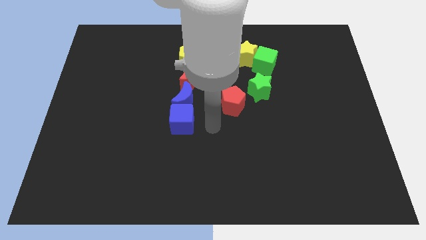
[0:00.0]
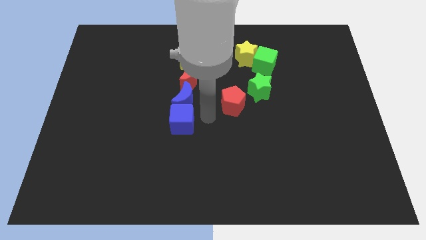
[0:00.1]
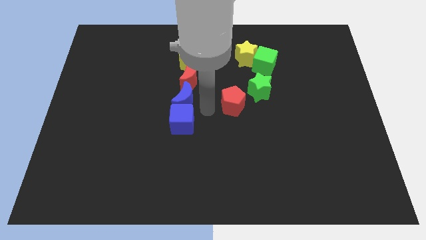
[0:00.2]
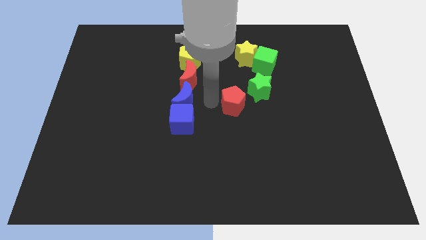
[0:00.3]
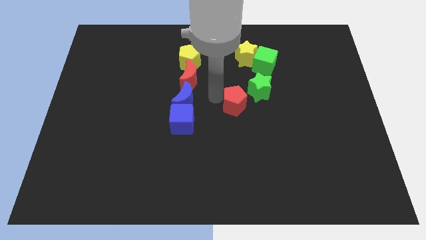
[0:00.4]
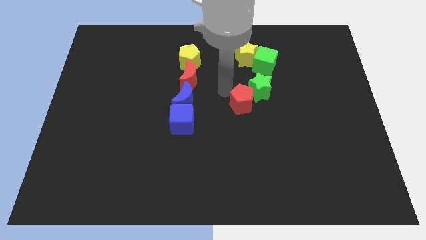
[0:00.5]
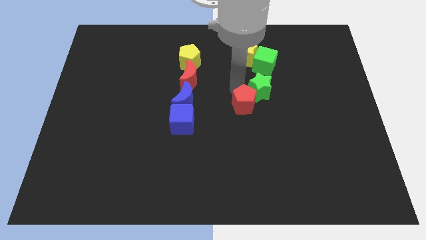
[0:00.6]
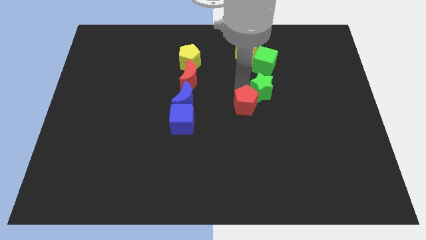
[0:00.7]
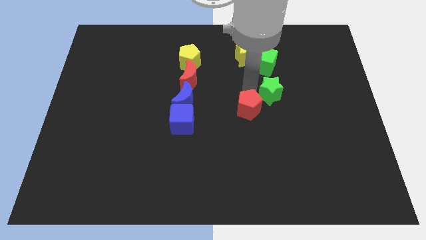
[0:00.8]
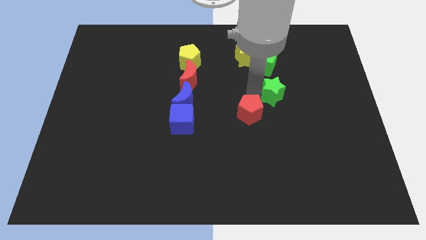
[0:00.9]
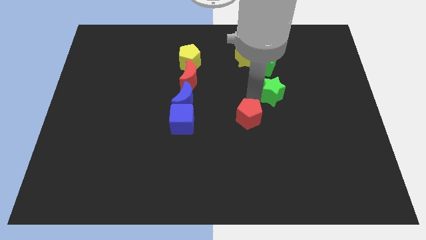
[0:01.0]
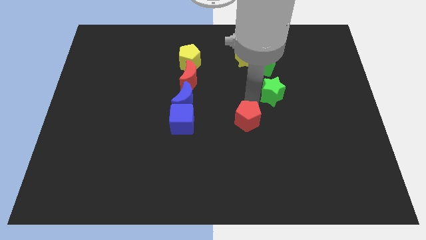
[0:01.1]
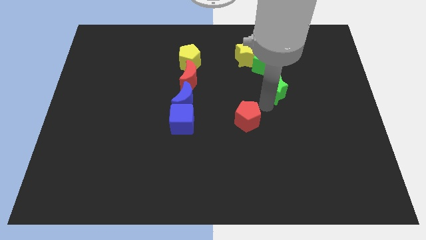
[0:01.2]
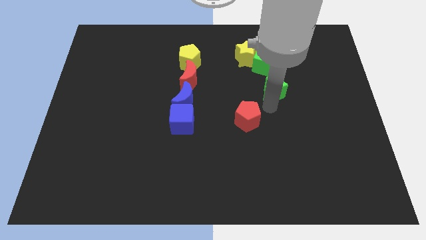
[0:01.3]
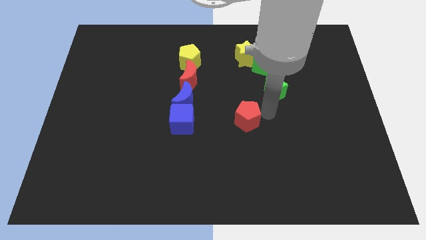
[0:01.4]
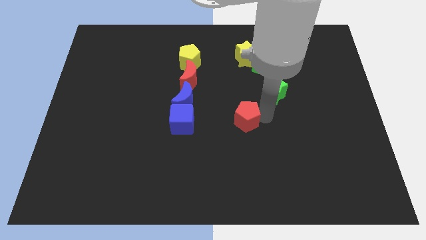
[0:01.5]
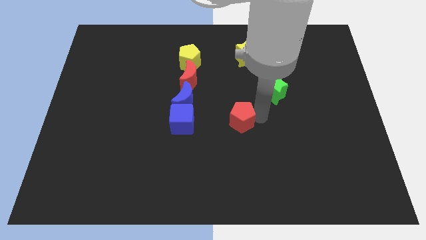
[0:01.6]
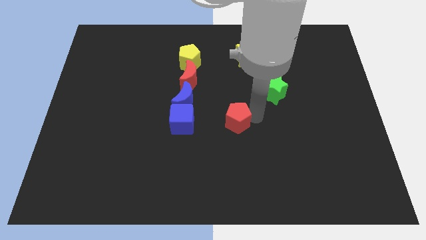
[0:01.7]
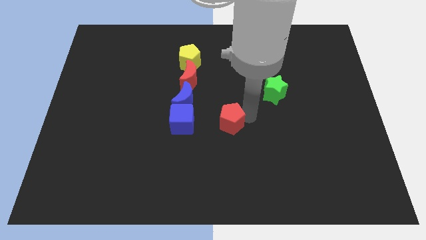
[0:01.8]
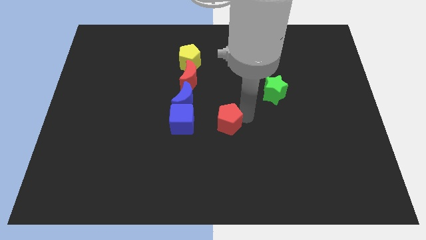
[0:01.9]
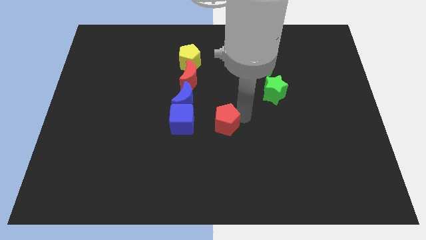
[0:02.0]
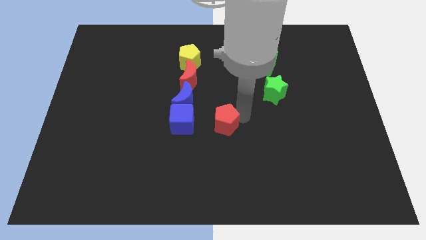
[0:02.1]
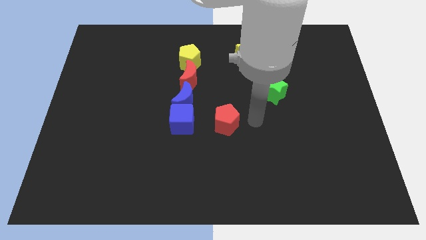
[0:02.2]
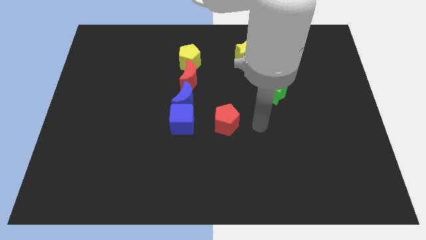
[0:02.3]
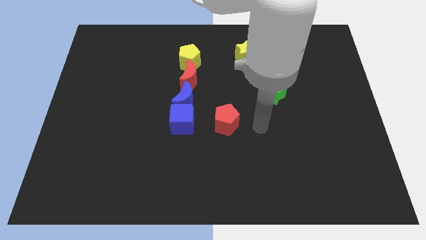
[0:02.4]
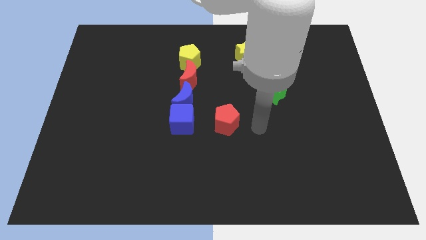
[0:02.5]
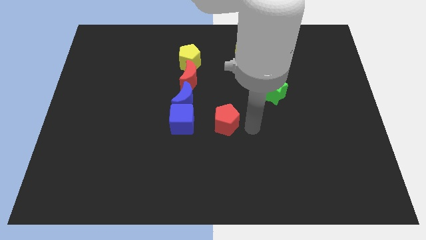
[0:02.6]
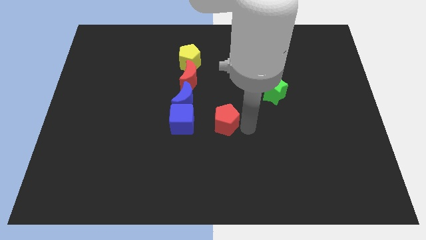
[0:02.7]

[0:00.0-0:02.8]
drag the red pentagon to the right of the blue cube

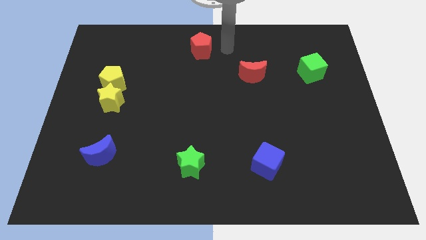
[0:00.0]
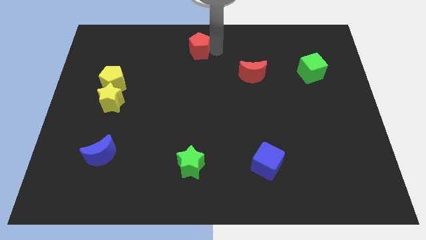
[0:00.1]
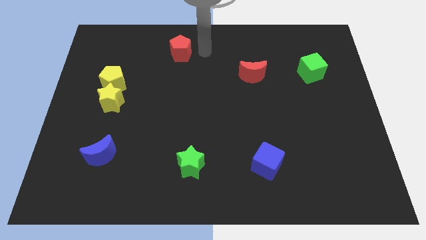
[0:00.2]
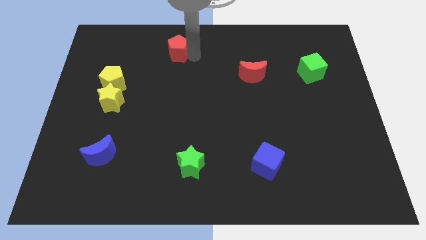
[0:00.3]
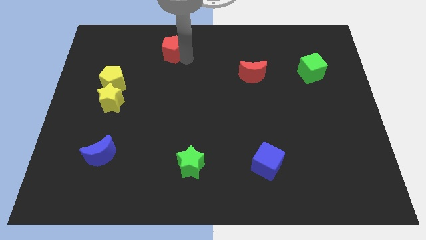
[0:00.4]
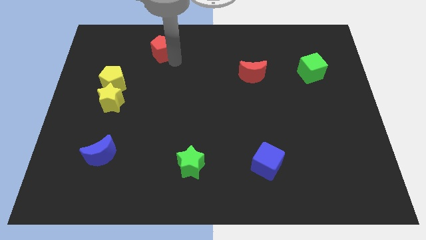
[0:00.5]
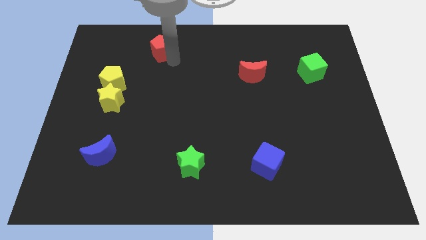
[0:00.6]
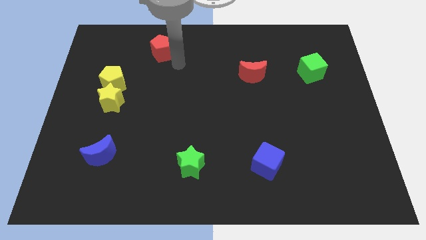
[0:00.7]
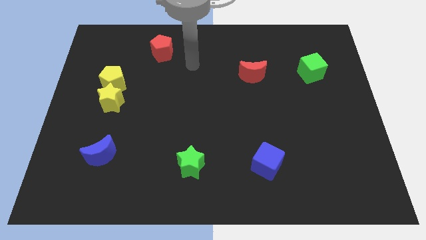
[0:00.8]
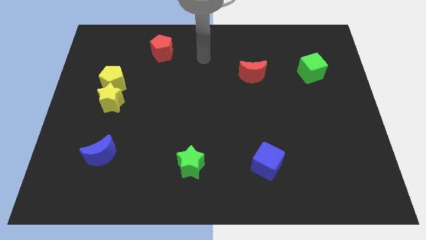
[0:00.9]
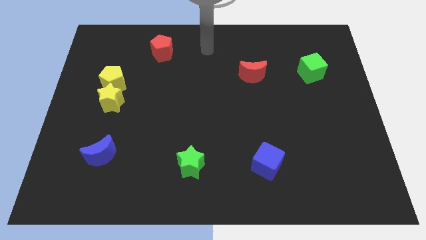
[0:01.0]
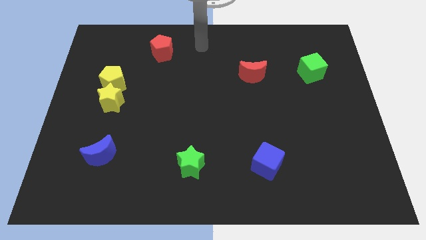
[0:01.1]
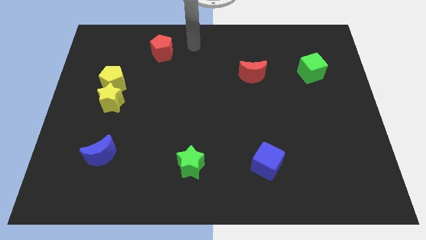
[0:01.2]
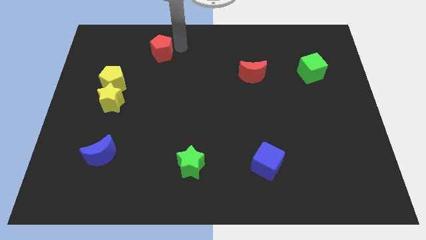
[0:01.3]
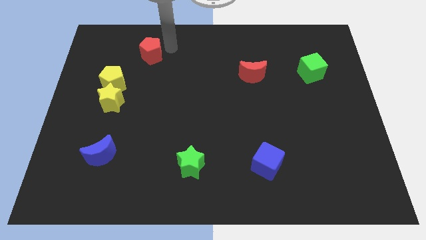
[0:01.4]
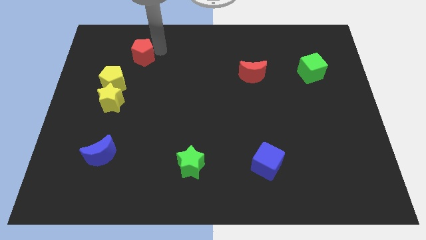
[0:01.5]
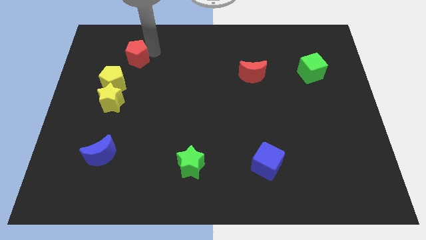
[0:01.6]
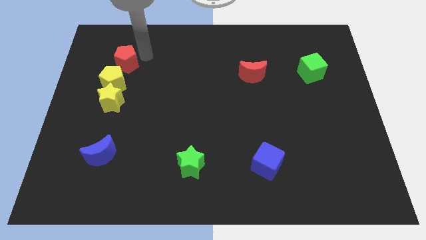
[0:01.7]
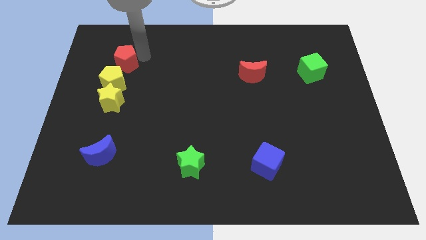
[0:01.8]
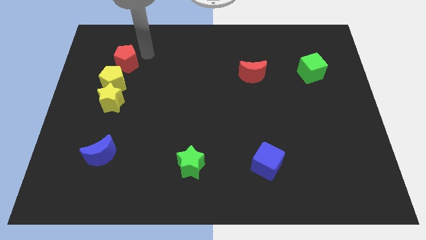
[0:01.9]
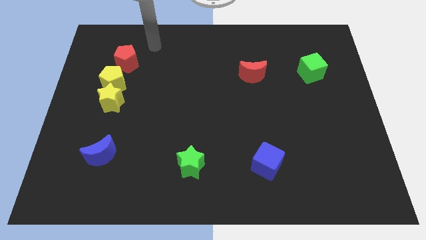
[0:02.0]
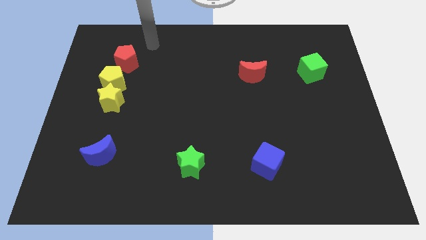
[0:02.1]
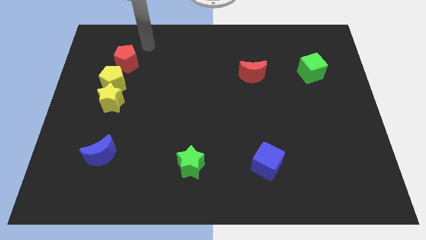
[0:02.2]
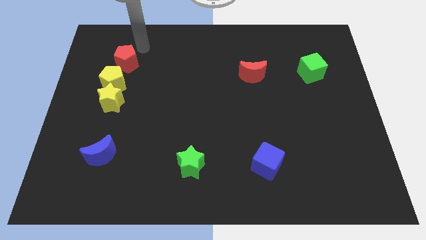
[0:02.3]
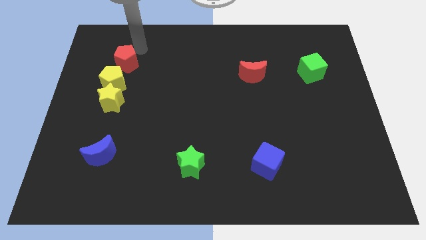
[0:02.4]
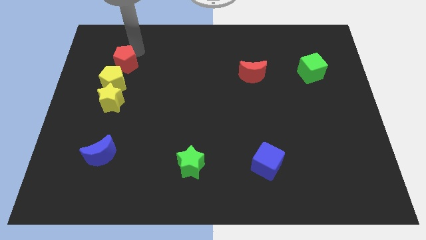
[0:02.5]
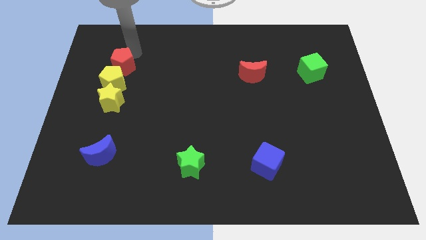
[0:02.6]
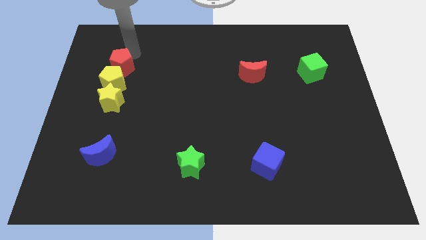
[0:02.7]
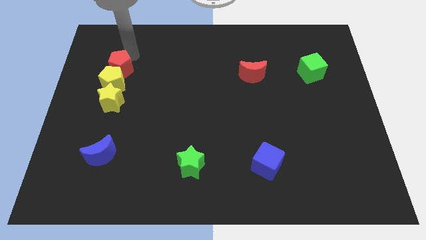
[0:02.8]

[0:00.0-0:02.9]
push the red pentagon into the yellow pentagon

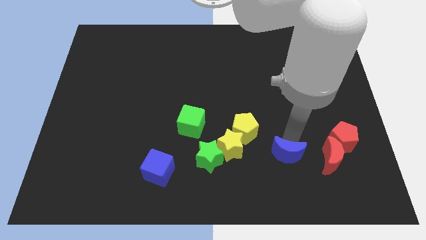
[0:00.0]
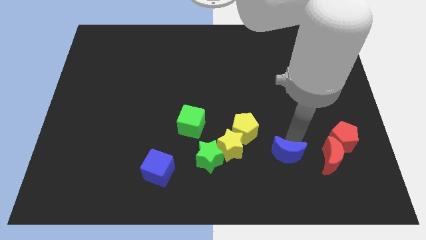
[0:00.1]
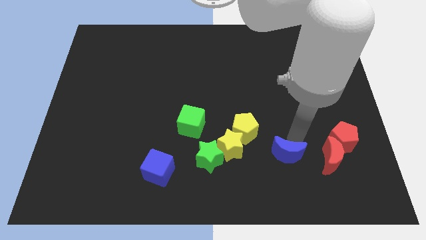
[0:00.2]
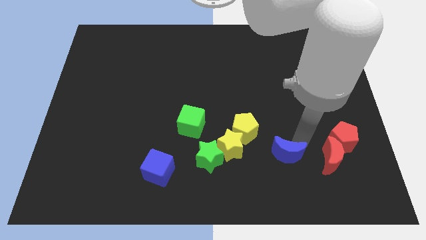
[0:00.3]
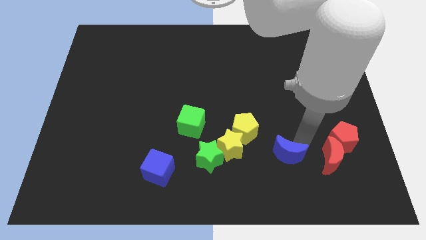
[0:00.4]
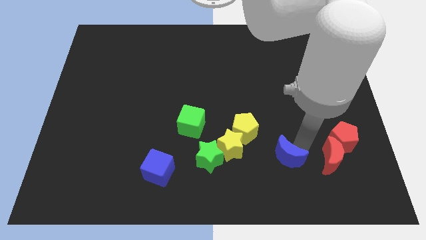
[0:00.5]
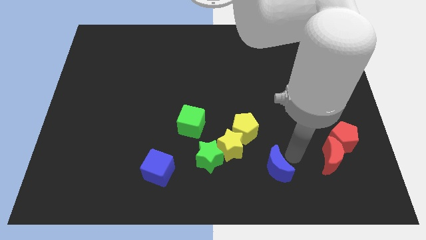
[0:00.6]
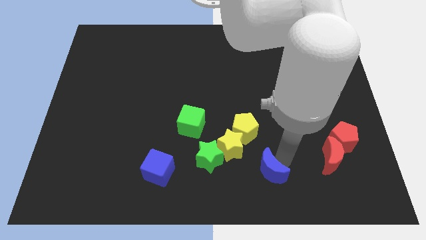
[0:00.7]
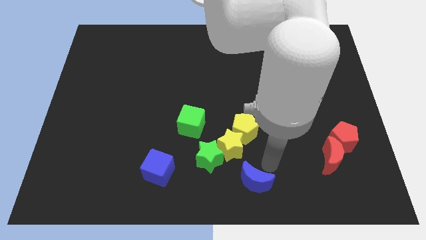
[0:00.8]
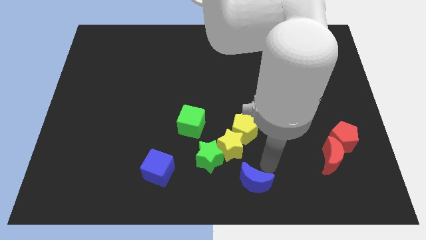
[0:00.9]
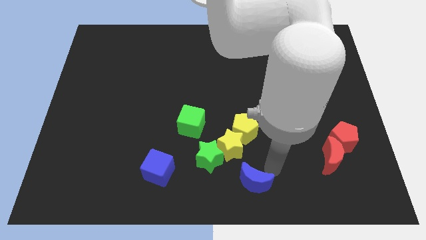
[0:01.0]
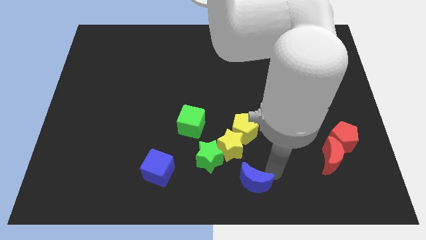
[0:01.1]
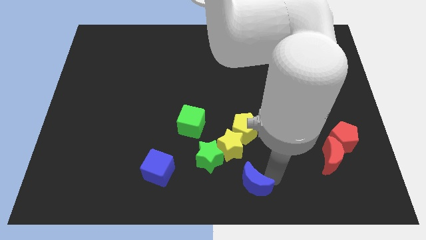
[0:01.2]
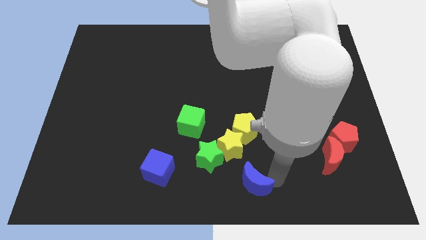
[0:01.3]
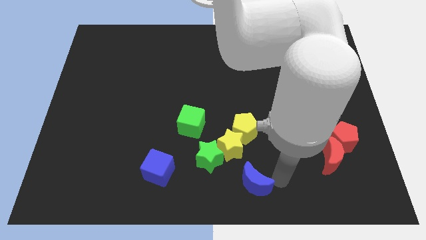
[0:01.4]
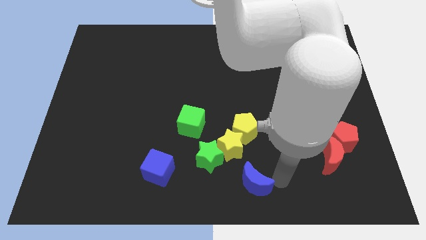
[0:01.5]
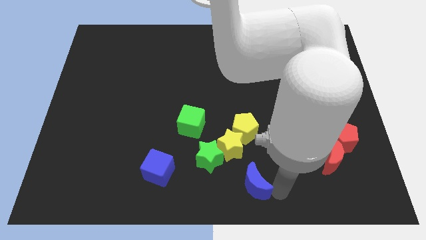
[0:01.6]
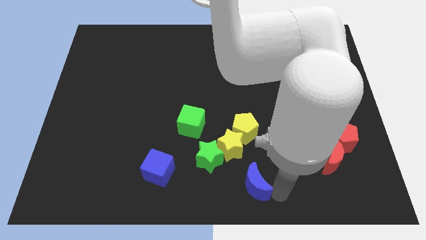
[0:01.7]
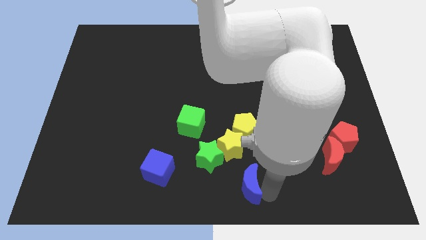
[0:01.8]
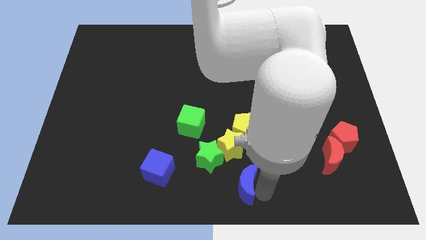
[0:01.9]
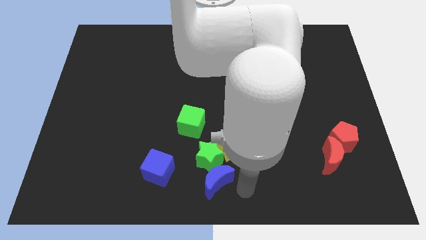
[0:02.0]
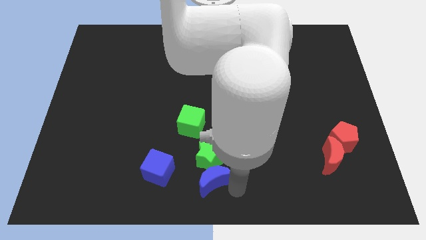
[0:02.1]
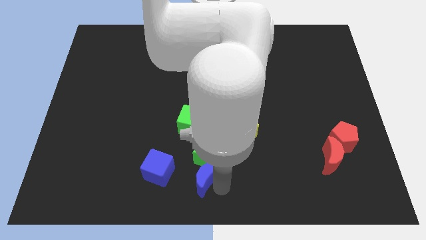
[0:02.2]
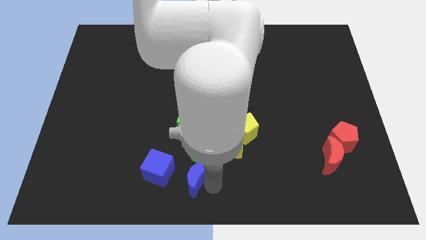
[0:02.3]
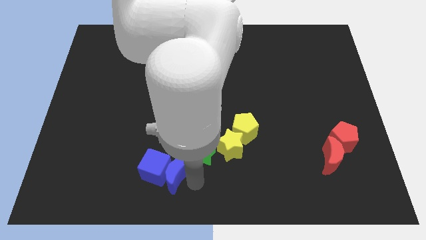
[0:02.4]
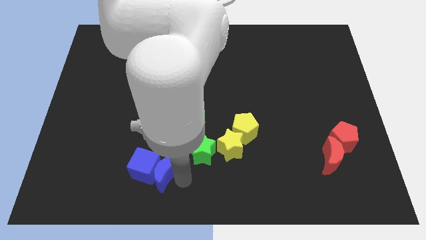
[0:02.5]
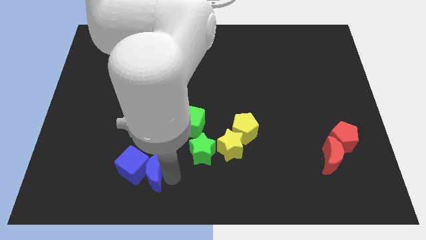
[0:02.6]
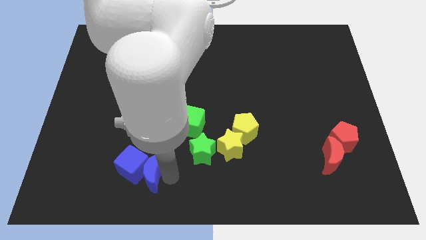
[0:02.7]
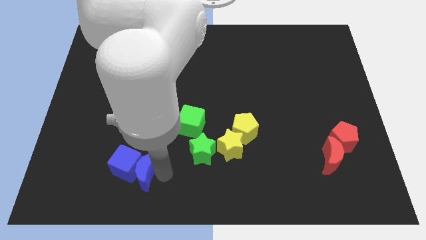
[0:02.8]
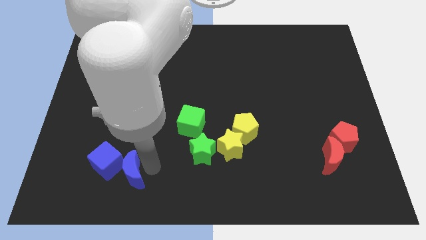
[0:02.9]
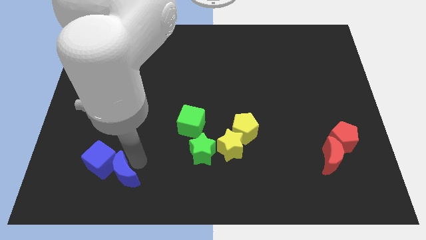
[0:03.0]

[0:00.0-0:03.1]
move blue moon into blue cube

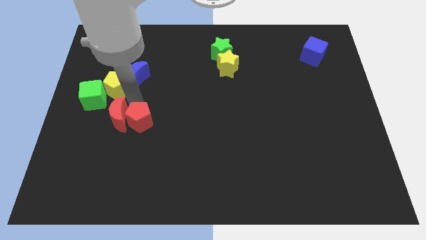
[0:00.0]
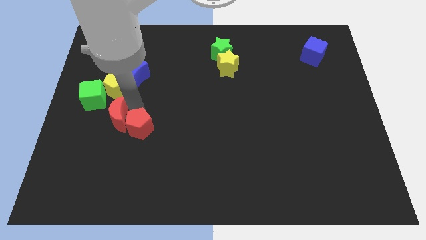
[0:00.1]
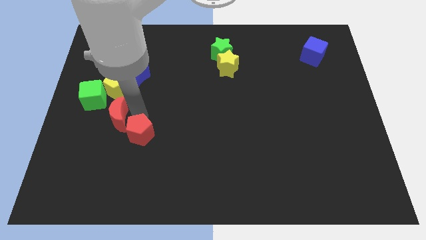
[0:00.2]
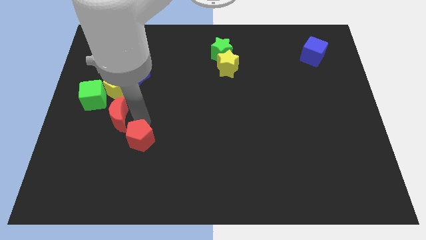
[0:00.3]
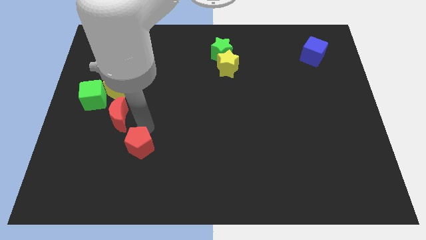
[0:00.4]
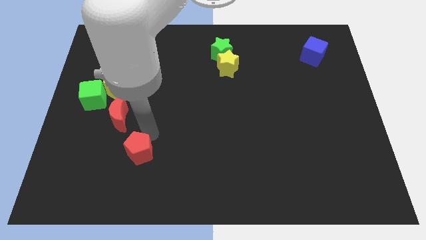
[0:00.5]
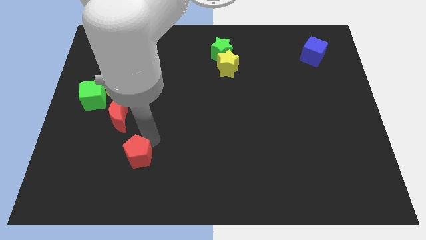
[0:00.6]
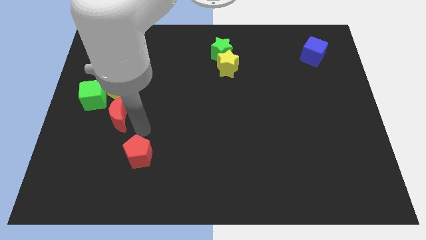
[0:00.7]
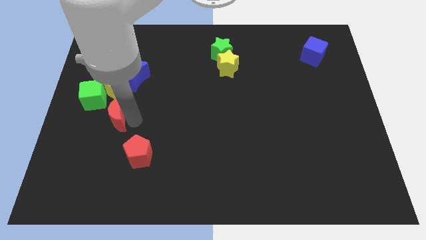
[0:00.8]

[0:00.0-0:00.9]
push red pentagon slightly down
